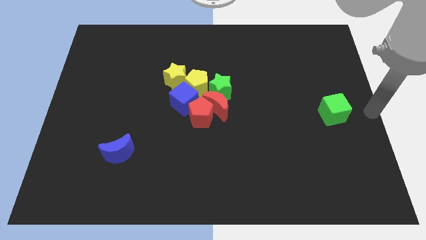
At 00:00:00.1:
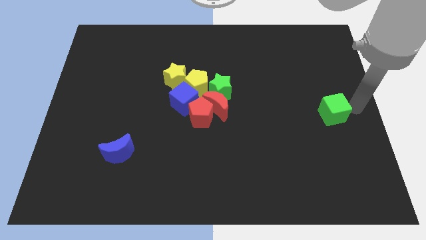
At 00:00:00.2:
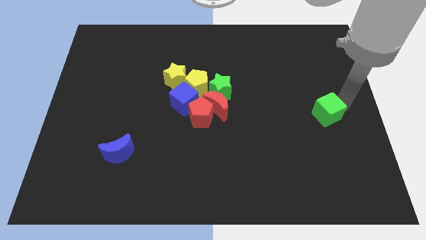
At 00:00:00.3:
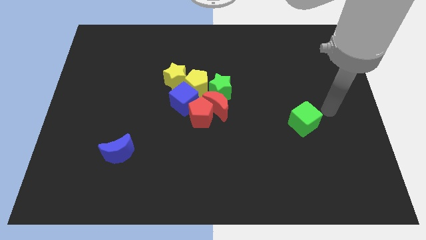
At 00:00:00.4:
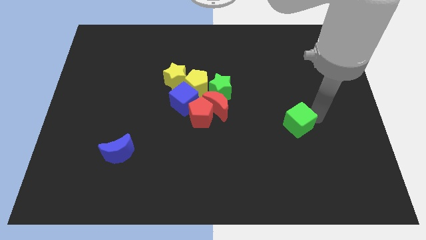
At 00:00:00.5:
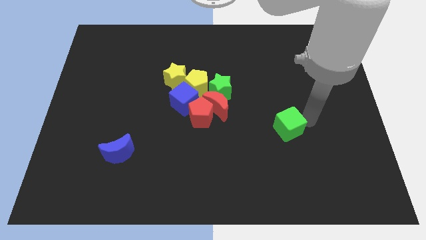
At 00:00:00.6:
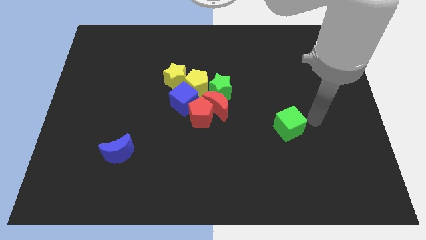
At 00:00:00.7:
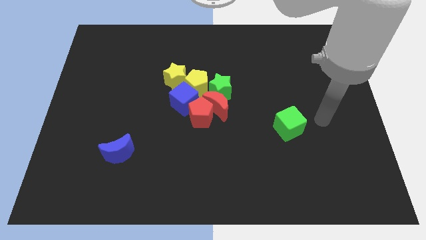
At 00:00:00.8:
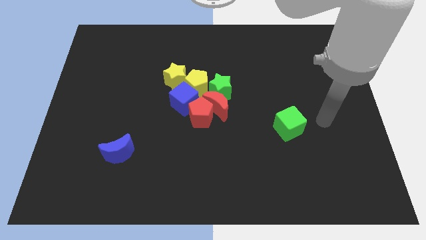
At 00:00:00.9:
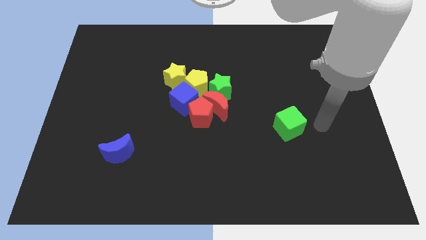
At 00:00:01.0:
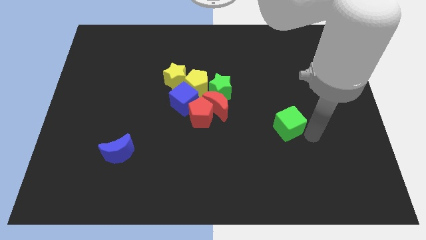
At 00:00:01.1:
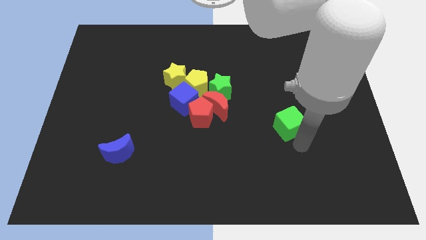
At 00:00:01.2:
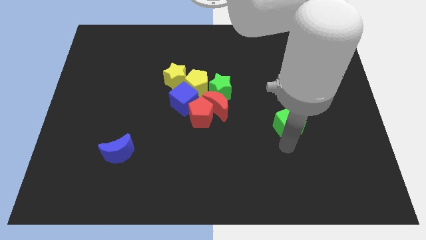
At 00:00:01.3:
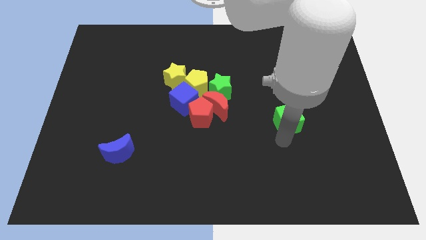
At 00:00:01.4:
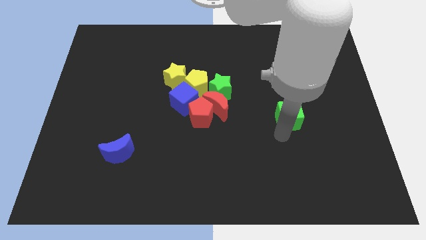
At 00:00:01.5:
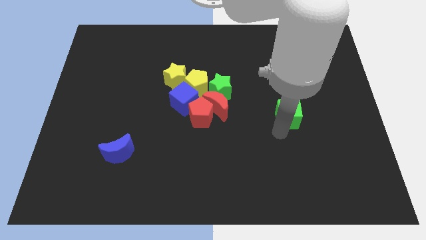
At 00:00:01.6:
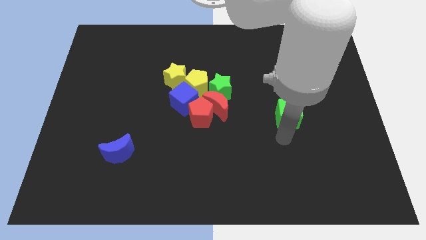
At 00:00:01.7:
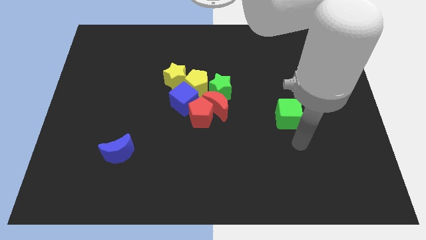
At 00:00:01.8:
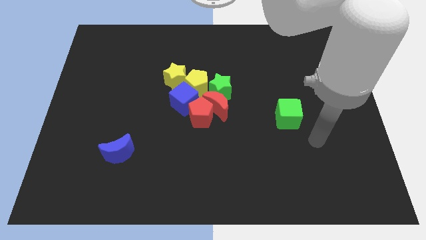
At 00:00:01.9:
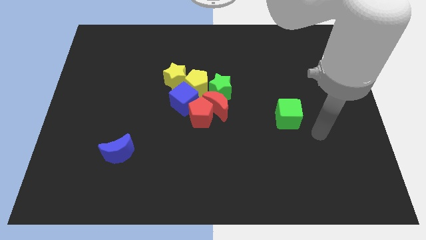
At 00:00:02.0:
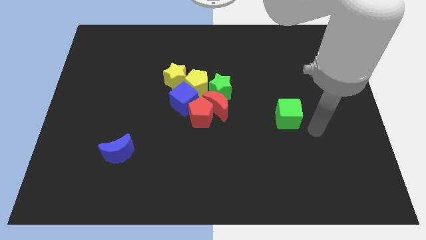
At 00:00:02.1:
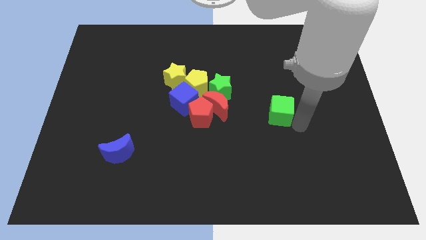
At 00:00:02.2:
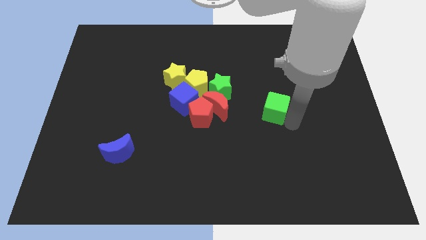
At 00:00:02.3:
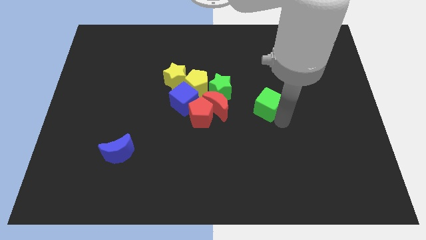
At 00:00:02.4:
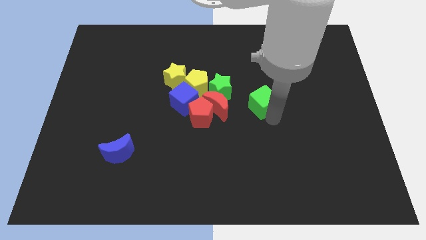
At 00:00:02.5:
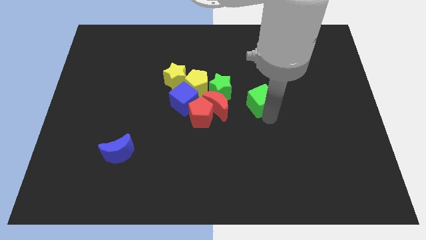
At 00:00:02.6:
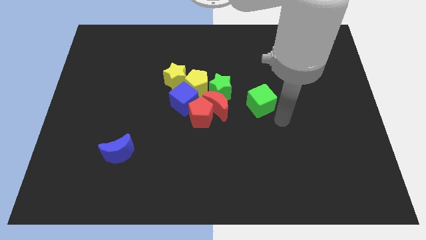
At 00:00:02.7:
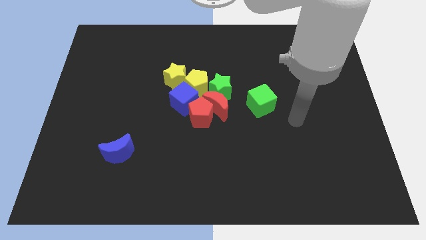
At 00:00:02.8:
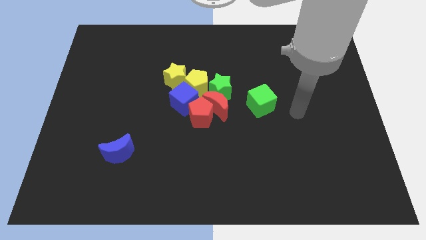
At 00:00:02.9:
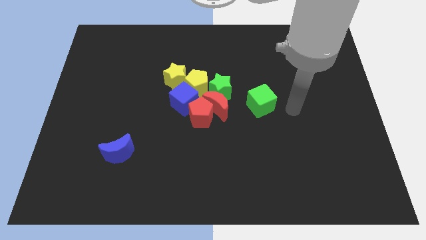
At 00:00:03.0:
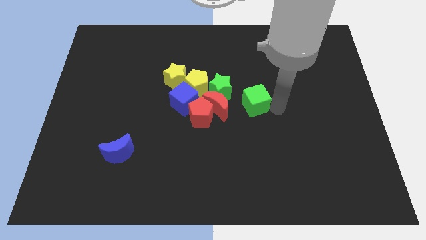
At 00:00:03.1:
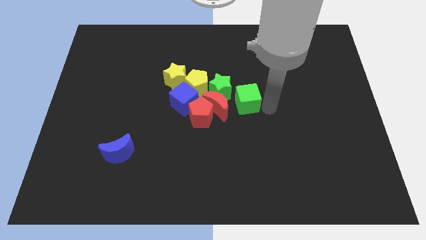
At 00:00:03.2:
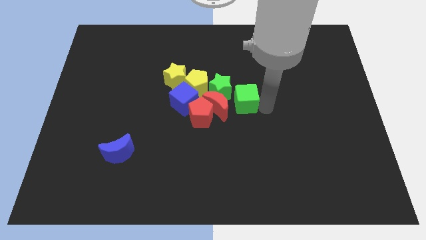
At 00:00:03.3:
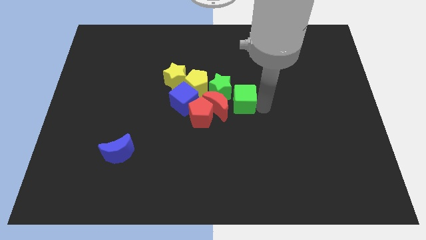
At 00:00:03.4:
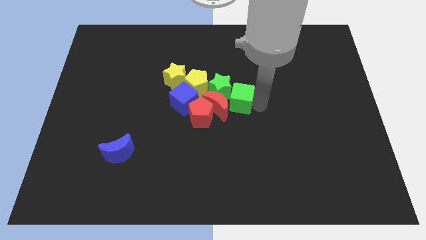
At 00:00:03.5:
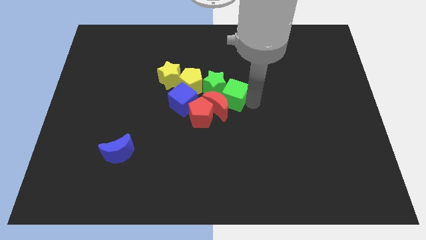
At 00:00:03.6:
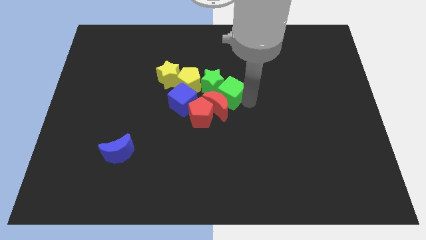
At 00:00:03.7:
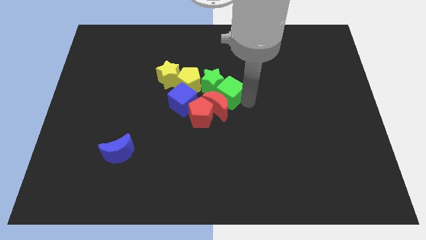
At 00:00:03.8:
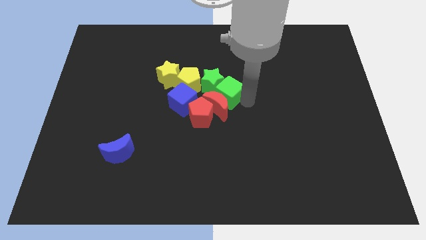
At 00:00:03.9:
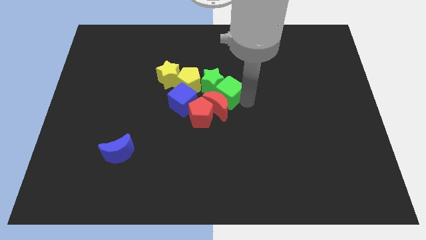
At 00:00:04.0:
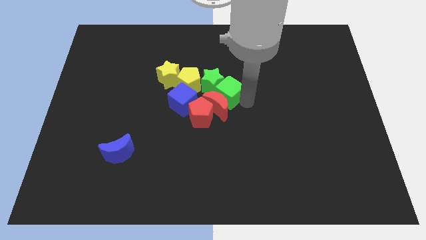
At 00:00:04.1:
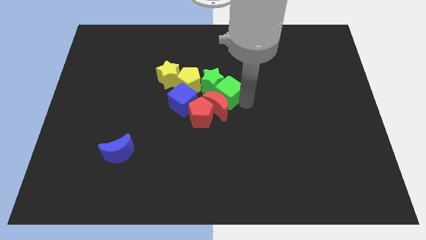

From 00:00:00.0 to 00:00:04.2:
push the green cube into the group of blocks

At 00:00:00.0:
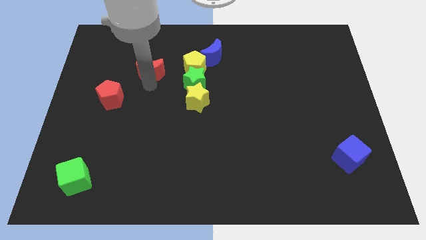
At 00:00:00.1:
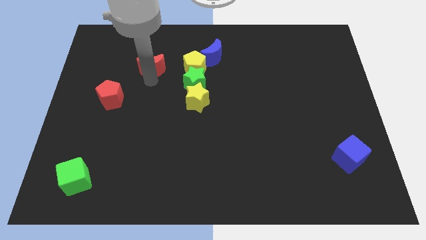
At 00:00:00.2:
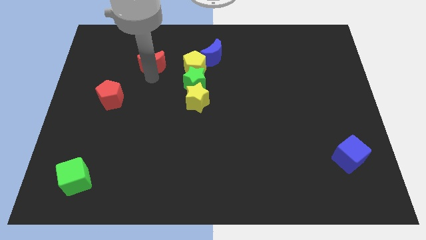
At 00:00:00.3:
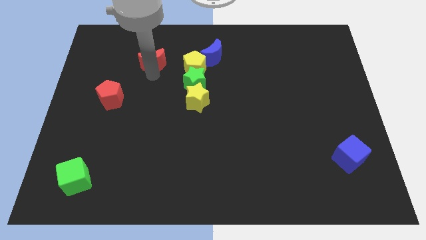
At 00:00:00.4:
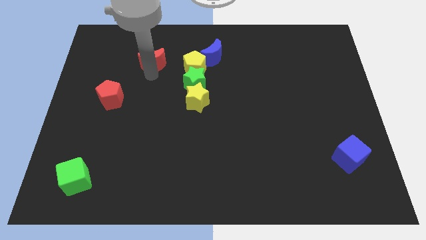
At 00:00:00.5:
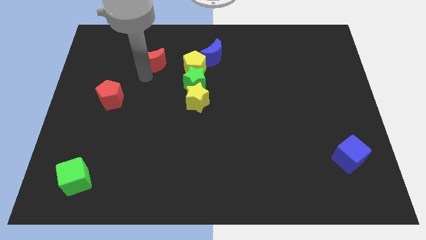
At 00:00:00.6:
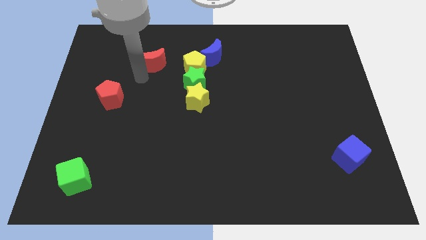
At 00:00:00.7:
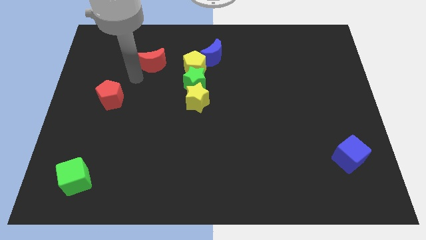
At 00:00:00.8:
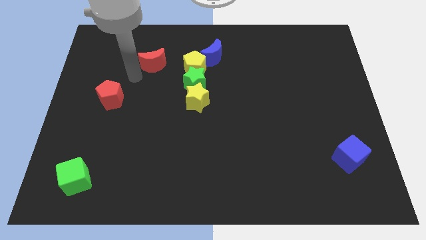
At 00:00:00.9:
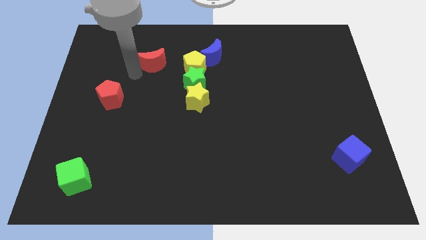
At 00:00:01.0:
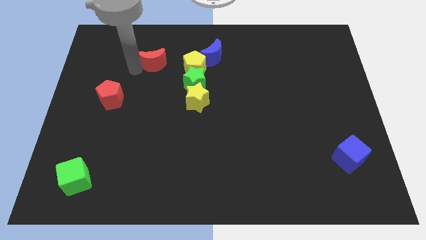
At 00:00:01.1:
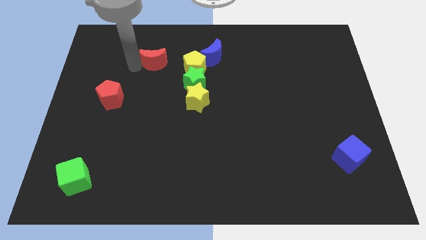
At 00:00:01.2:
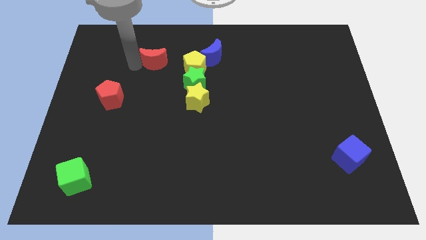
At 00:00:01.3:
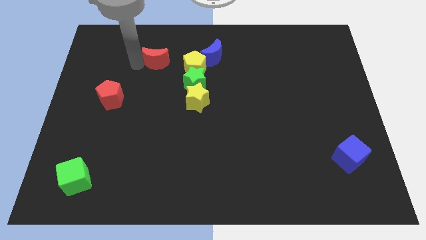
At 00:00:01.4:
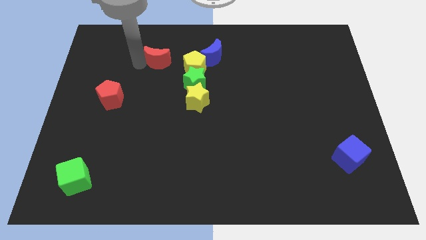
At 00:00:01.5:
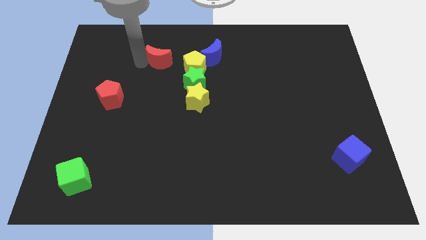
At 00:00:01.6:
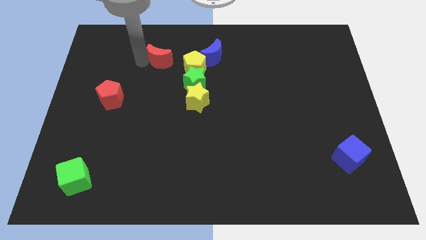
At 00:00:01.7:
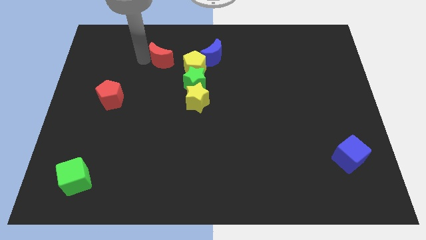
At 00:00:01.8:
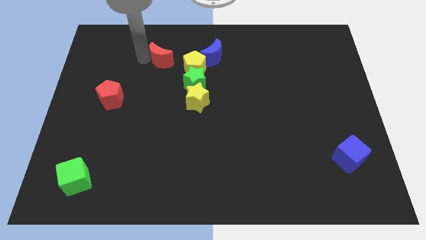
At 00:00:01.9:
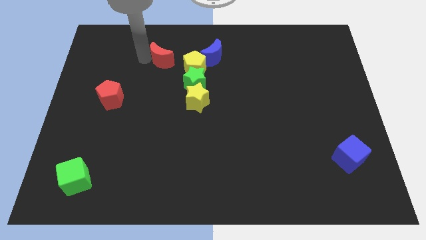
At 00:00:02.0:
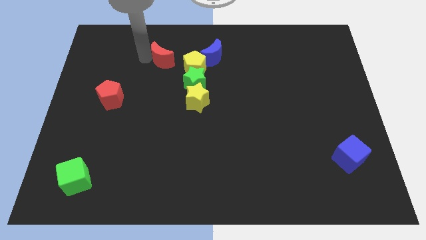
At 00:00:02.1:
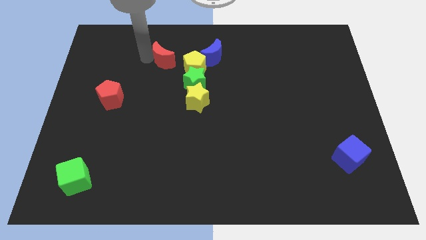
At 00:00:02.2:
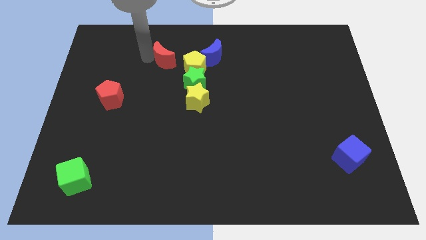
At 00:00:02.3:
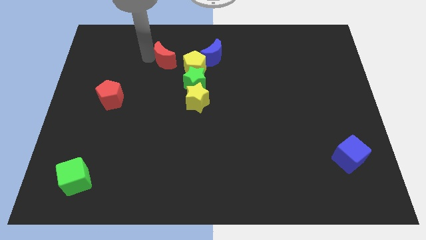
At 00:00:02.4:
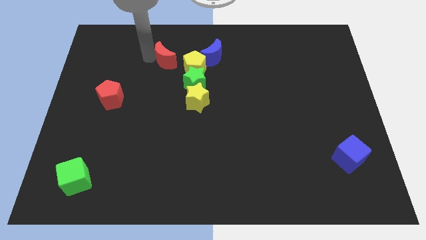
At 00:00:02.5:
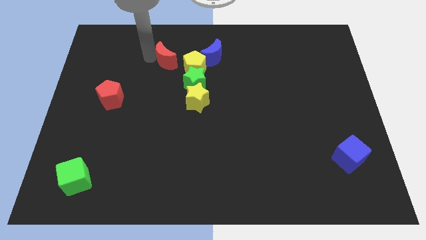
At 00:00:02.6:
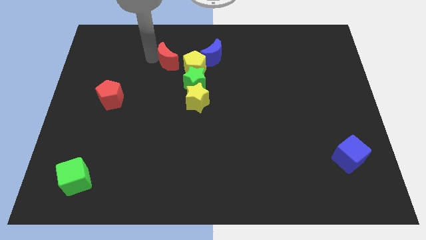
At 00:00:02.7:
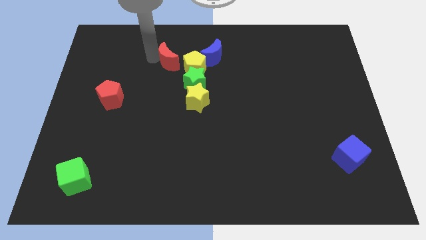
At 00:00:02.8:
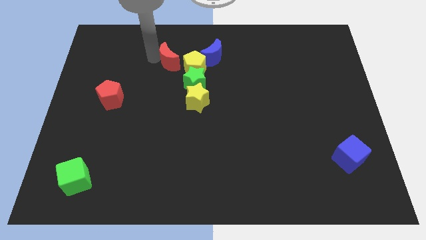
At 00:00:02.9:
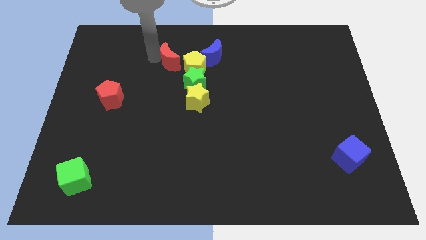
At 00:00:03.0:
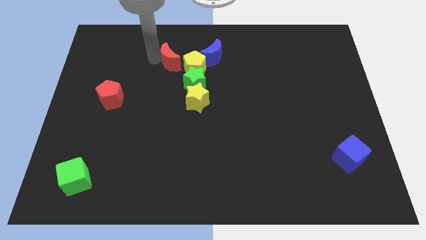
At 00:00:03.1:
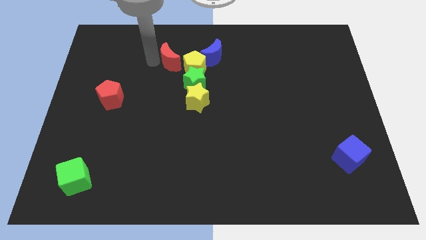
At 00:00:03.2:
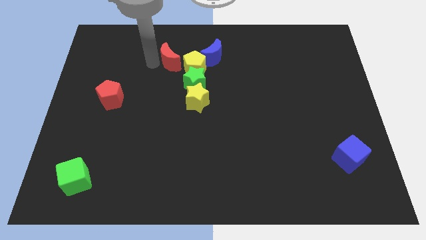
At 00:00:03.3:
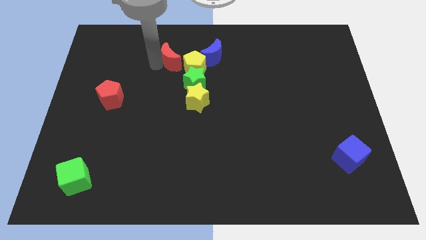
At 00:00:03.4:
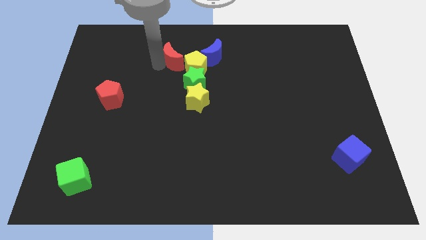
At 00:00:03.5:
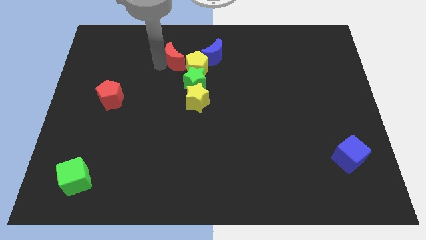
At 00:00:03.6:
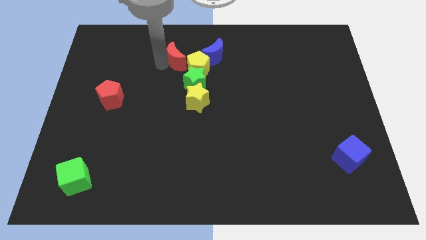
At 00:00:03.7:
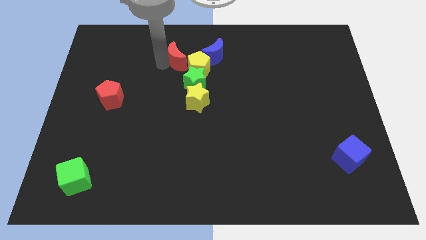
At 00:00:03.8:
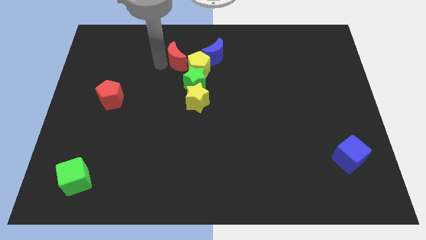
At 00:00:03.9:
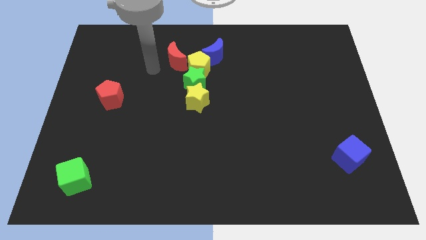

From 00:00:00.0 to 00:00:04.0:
push red moon in to yellow pentagon

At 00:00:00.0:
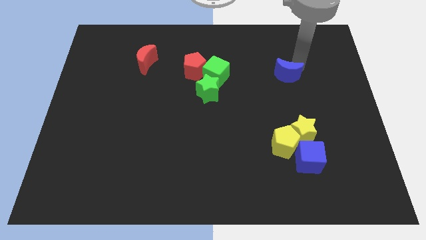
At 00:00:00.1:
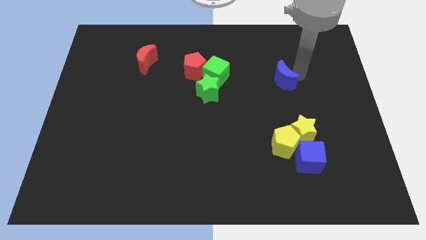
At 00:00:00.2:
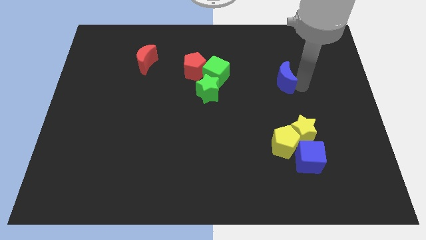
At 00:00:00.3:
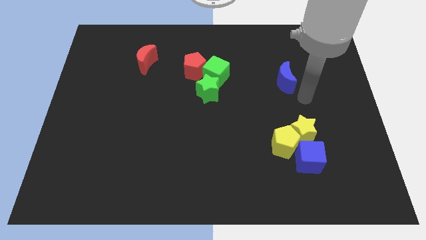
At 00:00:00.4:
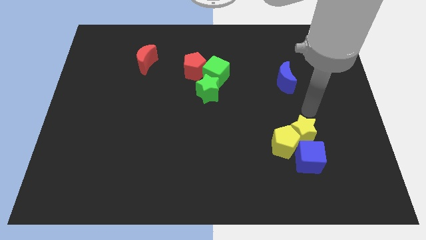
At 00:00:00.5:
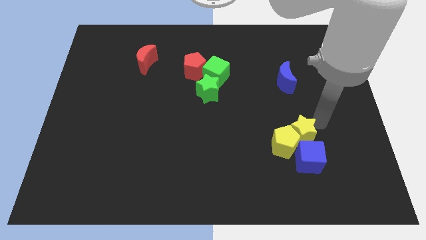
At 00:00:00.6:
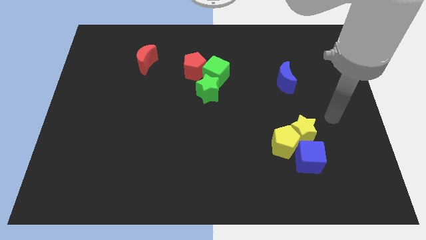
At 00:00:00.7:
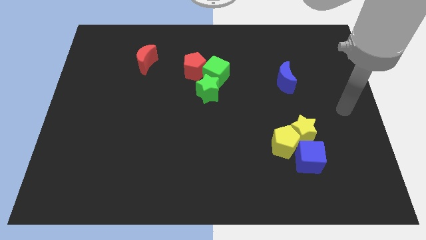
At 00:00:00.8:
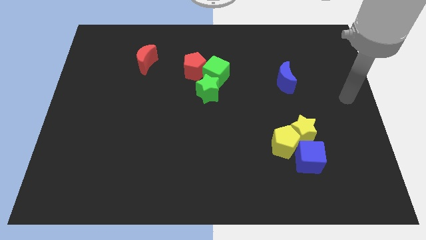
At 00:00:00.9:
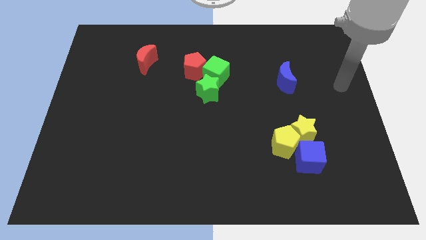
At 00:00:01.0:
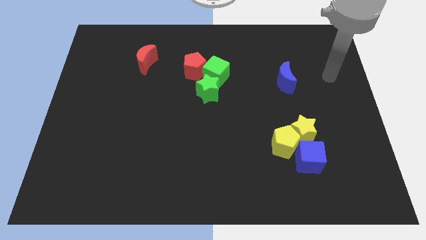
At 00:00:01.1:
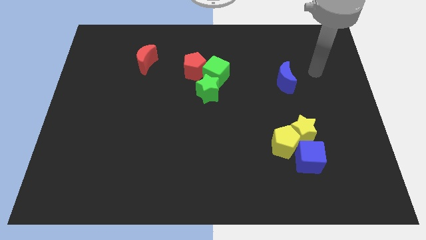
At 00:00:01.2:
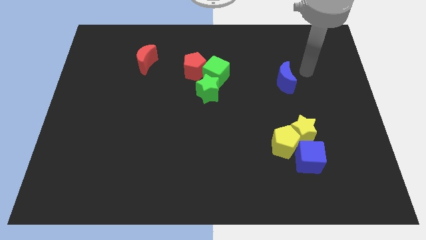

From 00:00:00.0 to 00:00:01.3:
move your arm away from the blue moon
